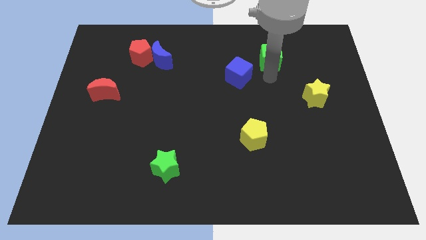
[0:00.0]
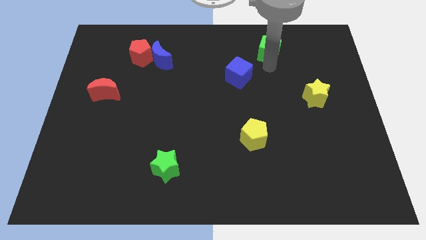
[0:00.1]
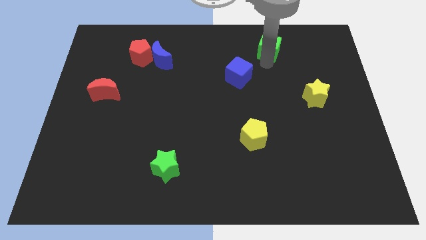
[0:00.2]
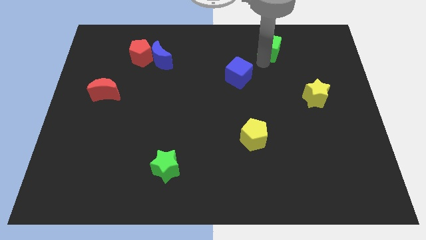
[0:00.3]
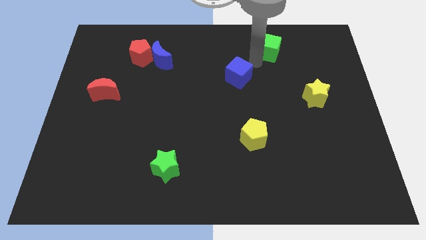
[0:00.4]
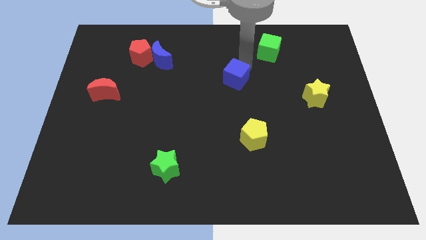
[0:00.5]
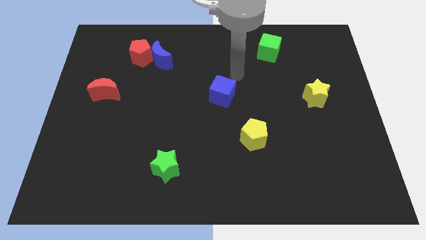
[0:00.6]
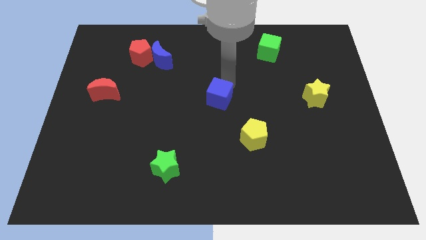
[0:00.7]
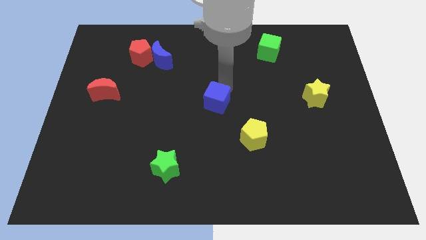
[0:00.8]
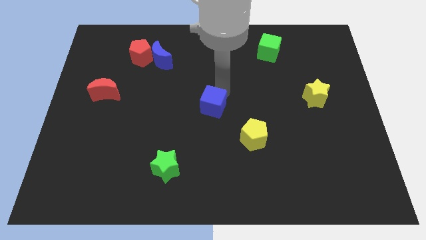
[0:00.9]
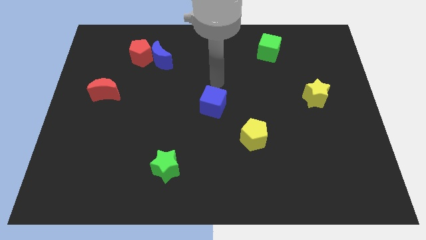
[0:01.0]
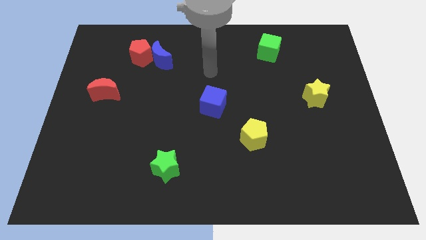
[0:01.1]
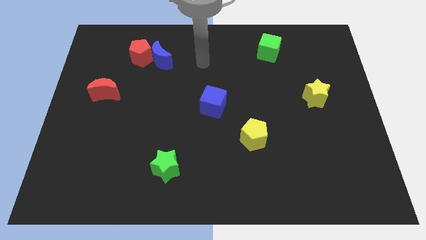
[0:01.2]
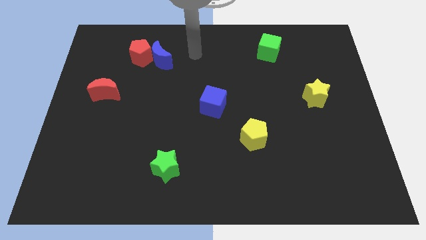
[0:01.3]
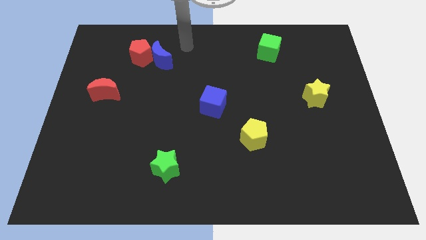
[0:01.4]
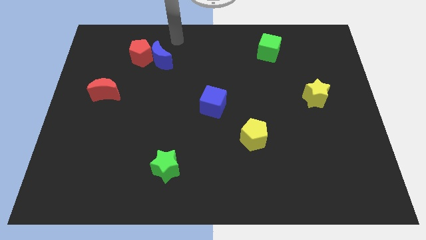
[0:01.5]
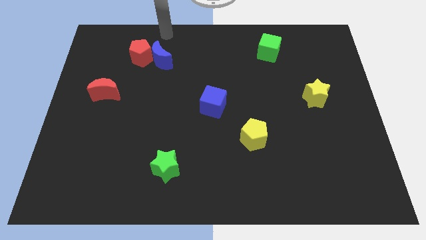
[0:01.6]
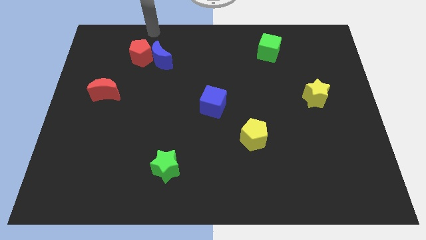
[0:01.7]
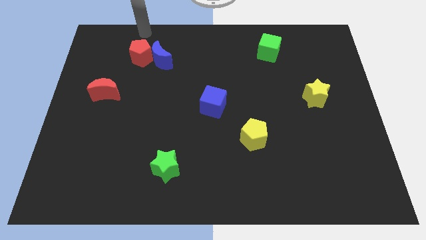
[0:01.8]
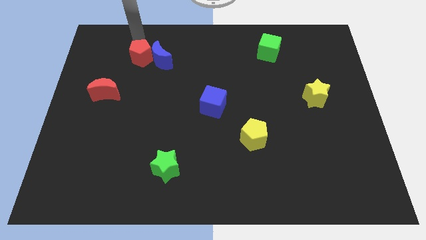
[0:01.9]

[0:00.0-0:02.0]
place the blue cube diagonally to the yellow pentagon

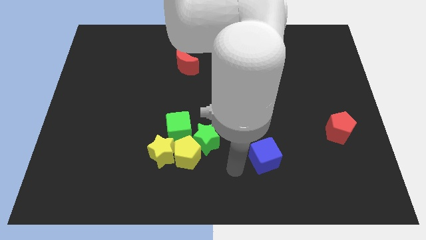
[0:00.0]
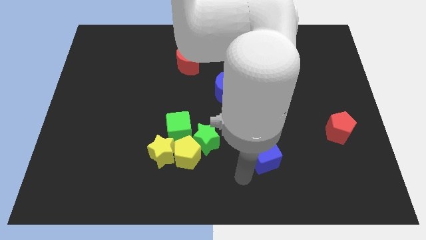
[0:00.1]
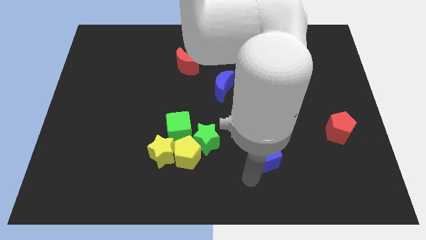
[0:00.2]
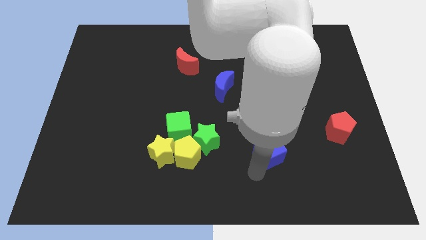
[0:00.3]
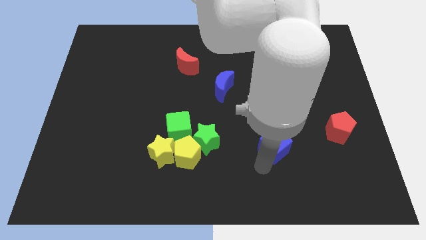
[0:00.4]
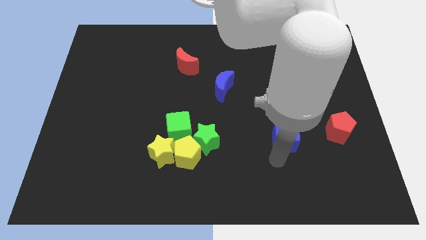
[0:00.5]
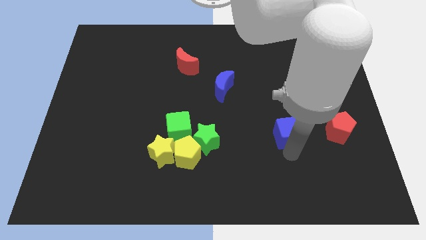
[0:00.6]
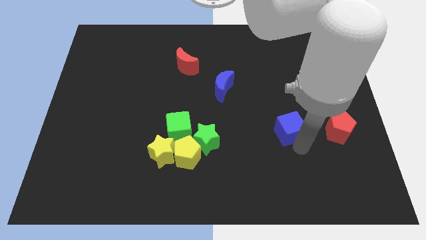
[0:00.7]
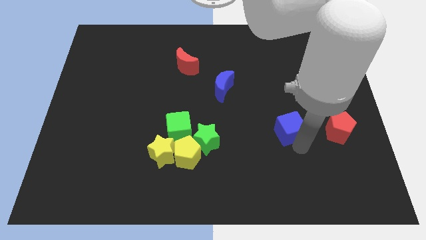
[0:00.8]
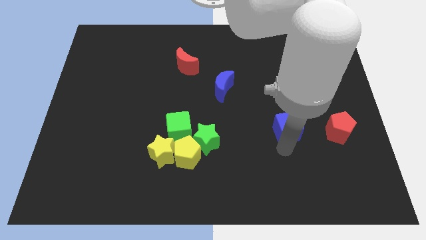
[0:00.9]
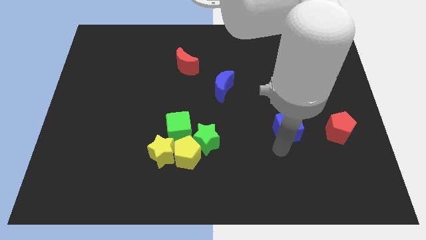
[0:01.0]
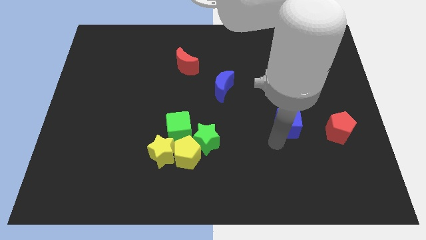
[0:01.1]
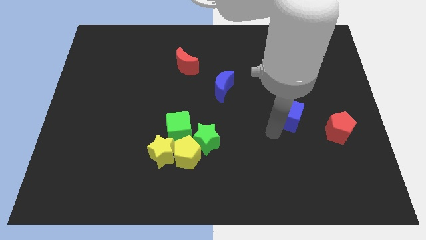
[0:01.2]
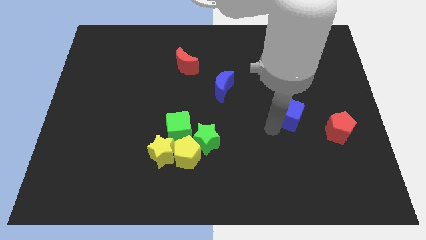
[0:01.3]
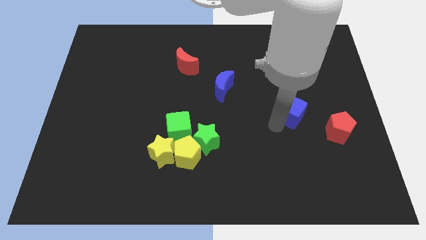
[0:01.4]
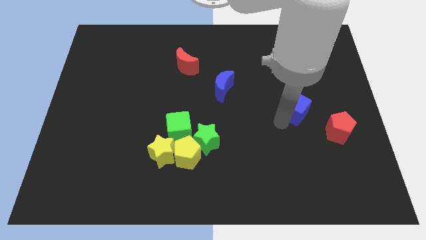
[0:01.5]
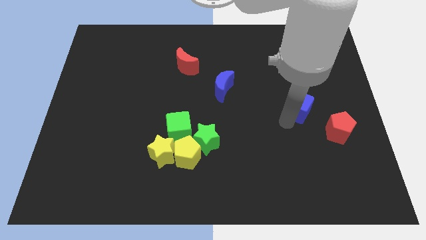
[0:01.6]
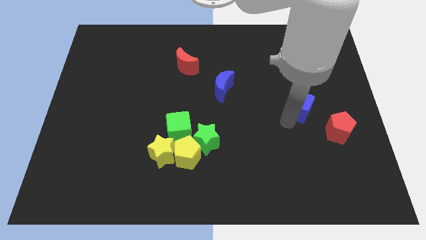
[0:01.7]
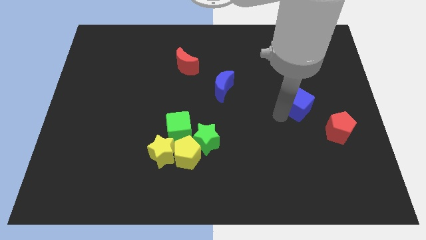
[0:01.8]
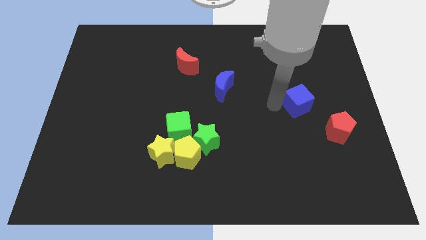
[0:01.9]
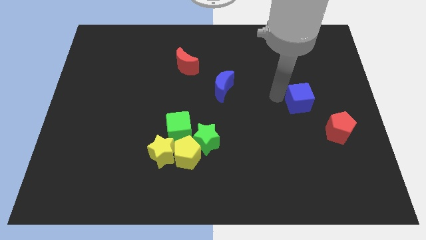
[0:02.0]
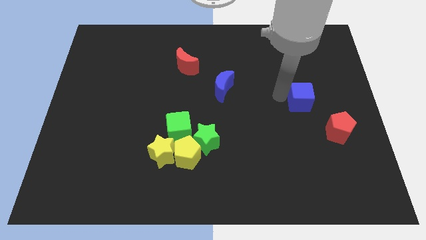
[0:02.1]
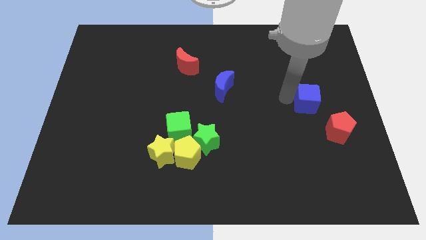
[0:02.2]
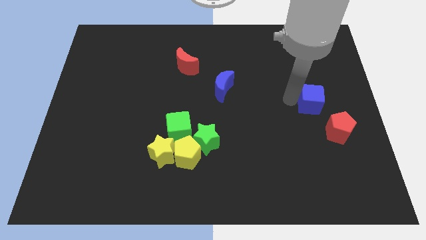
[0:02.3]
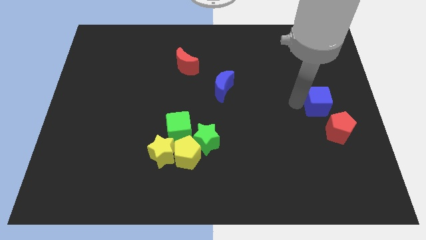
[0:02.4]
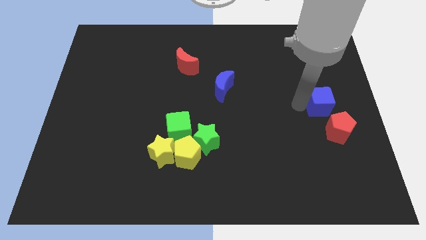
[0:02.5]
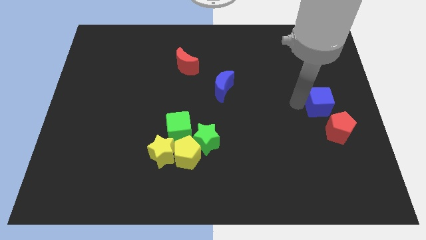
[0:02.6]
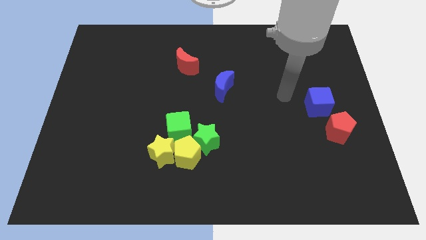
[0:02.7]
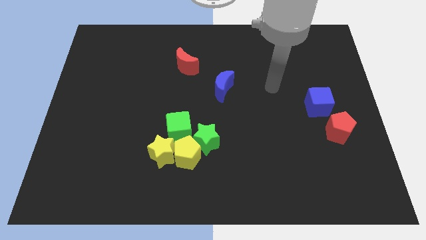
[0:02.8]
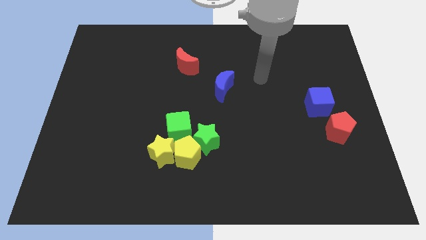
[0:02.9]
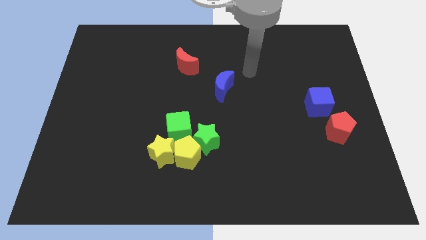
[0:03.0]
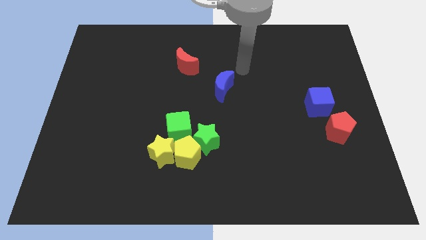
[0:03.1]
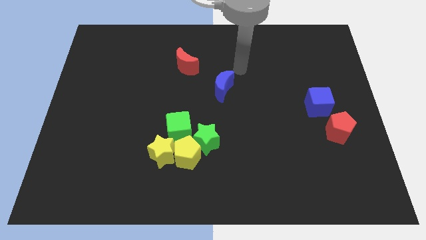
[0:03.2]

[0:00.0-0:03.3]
place blue cube above red pentagon

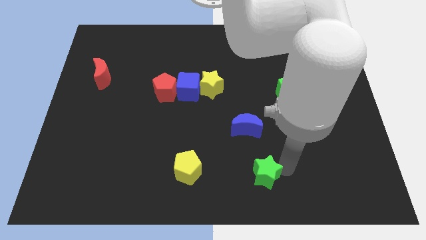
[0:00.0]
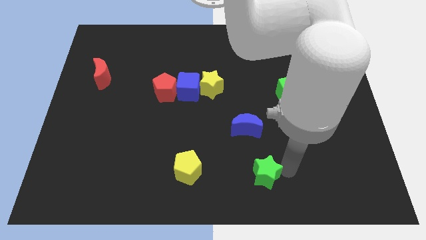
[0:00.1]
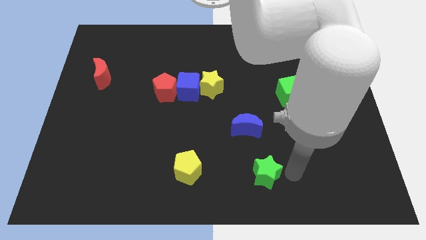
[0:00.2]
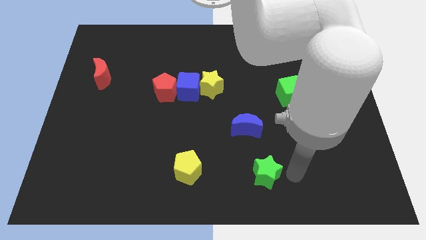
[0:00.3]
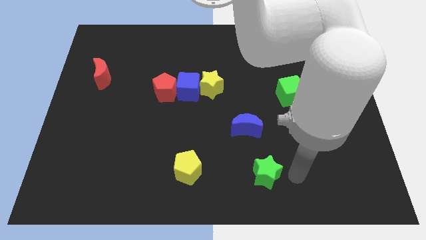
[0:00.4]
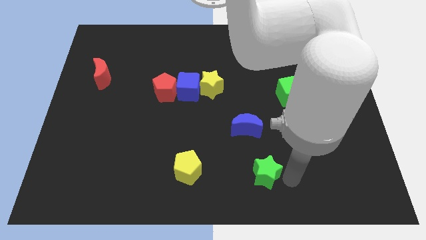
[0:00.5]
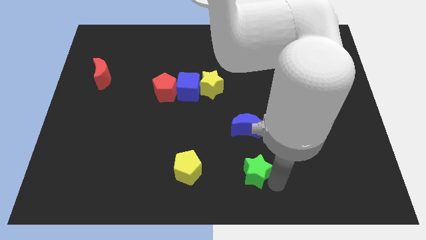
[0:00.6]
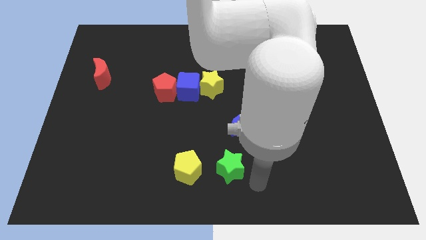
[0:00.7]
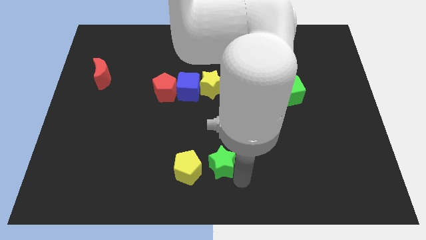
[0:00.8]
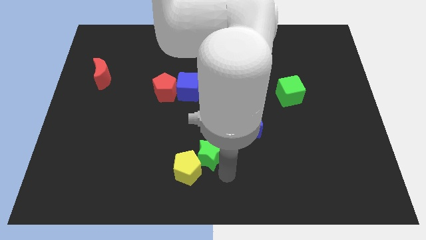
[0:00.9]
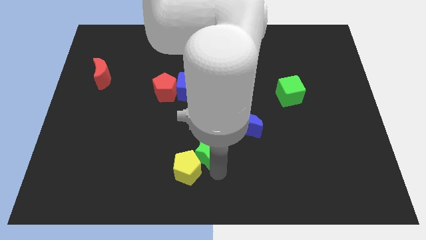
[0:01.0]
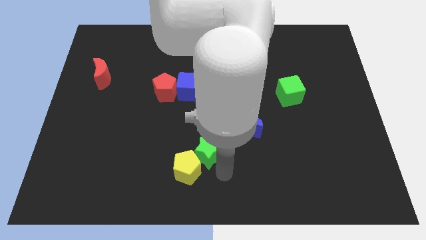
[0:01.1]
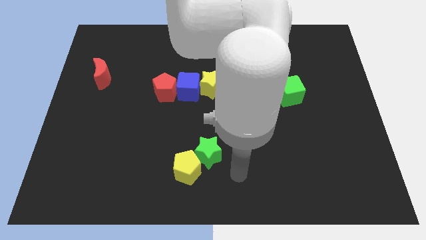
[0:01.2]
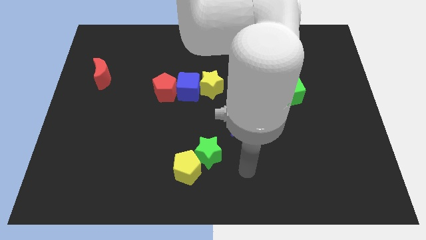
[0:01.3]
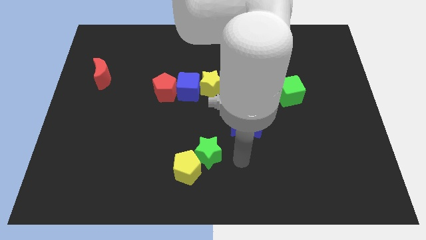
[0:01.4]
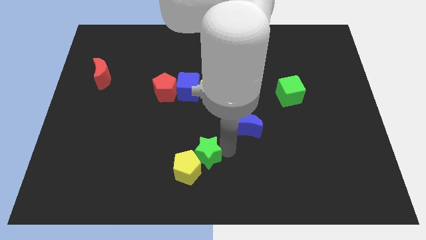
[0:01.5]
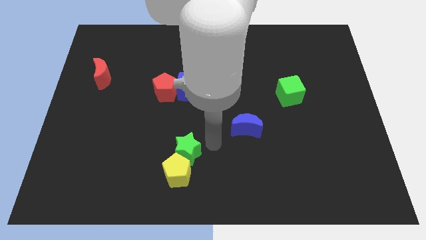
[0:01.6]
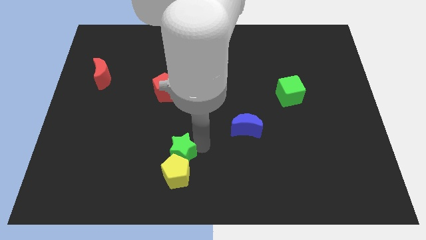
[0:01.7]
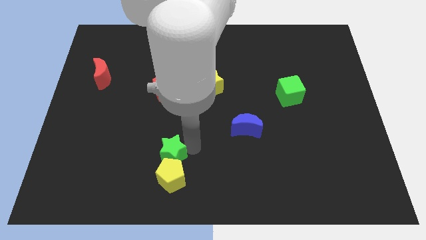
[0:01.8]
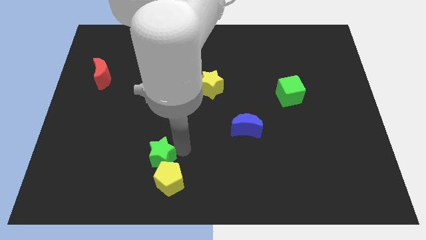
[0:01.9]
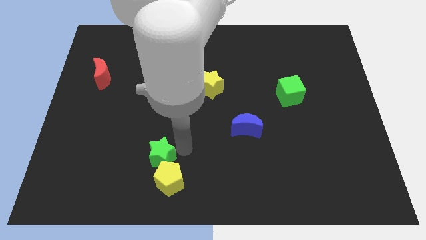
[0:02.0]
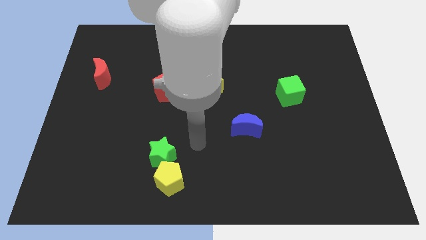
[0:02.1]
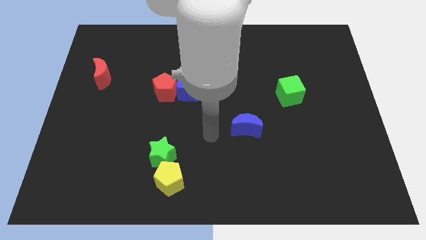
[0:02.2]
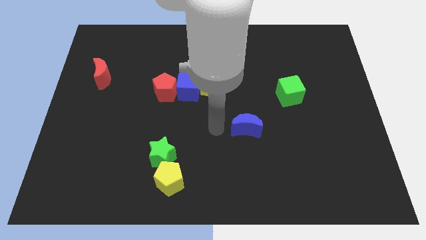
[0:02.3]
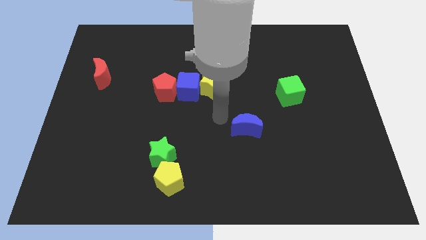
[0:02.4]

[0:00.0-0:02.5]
place green star to the top of yellow pentagon

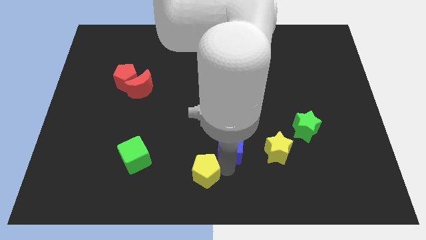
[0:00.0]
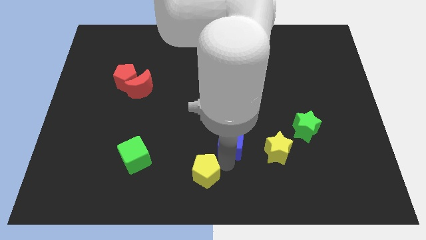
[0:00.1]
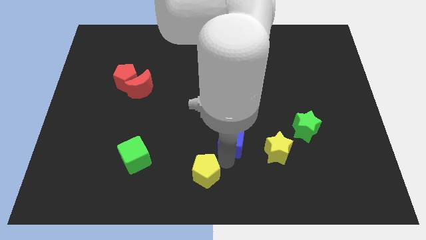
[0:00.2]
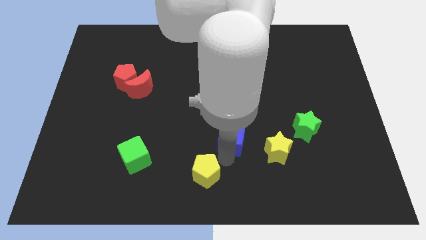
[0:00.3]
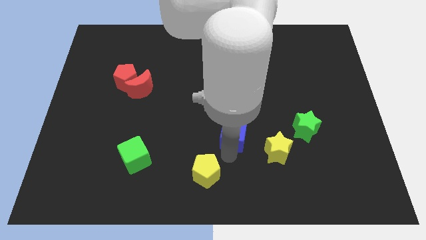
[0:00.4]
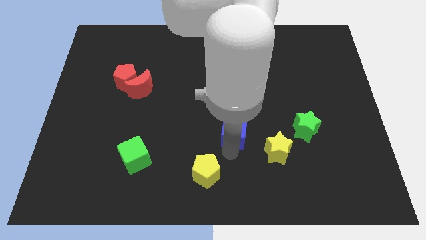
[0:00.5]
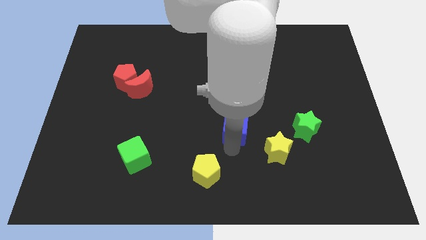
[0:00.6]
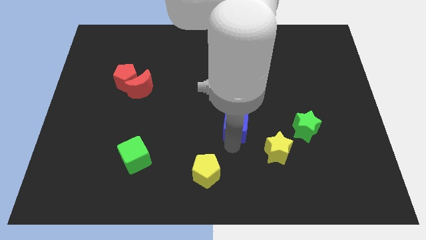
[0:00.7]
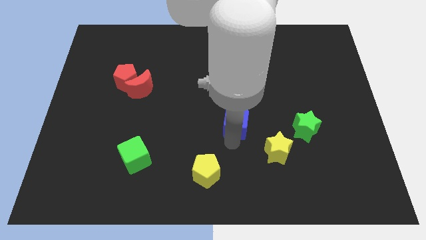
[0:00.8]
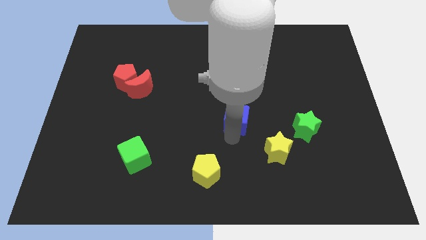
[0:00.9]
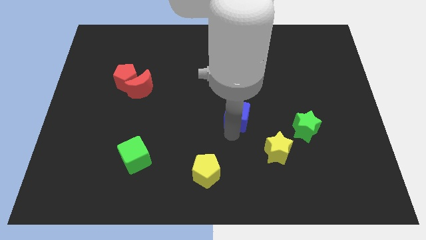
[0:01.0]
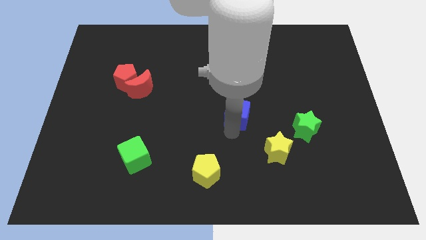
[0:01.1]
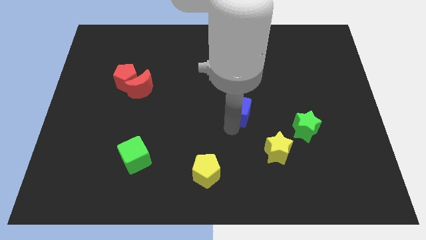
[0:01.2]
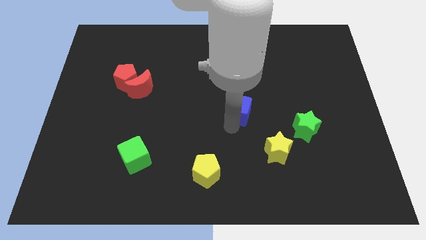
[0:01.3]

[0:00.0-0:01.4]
push the blue cube to the top
